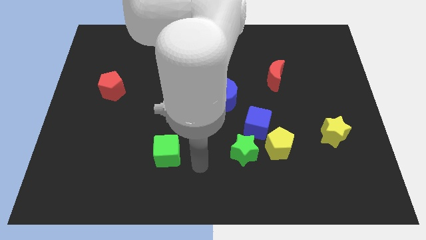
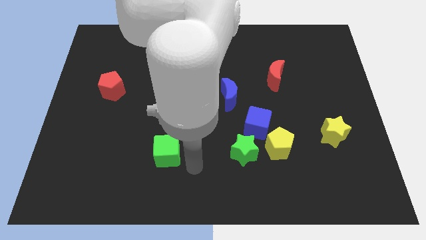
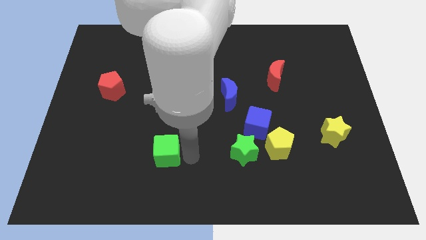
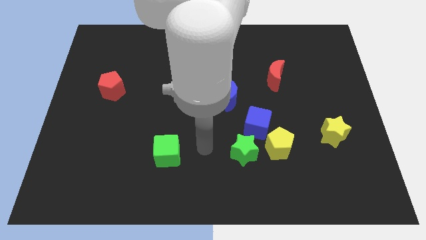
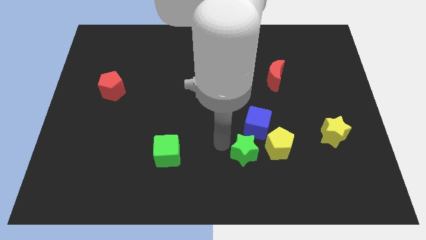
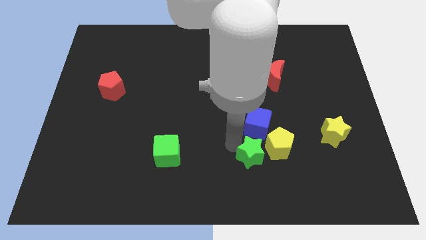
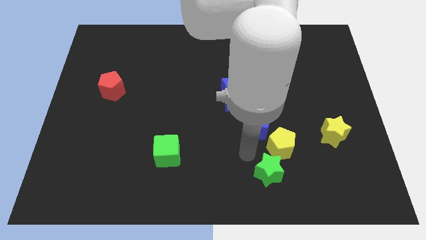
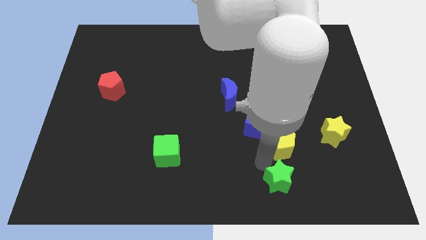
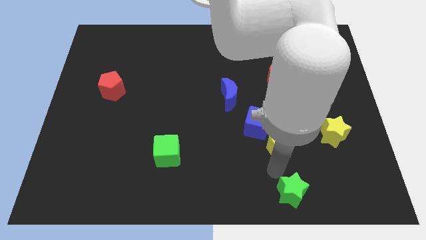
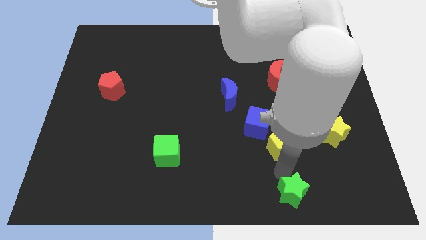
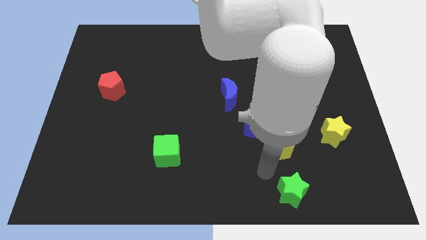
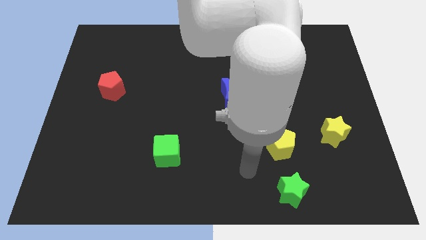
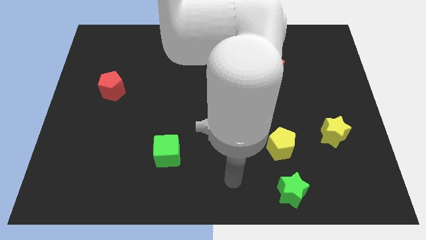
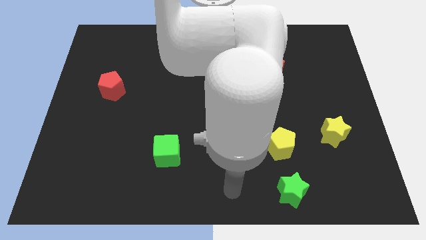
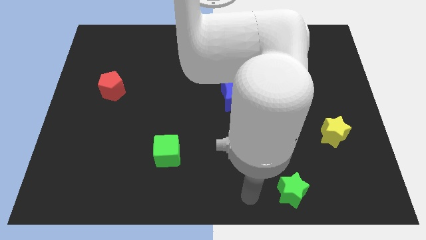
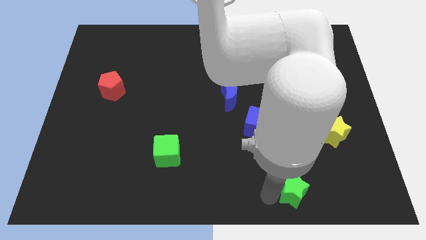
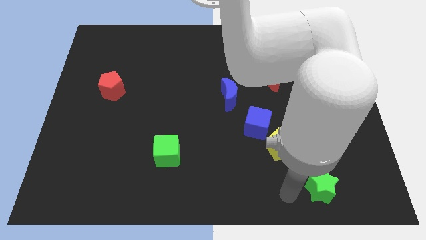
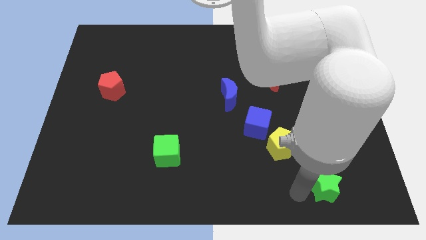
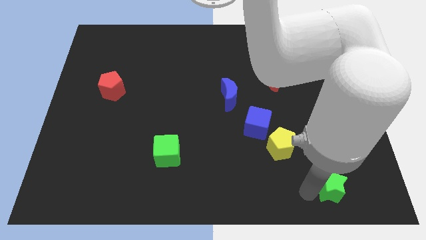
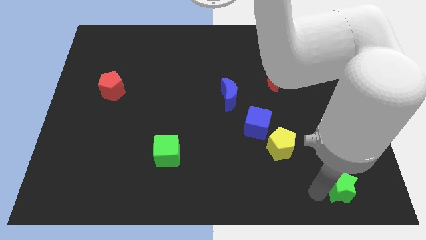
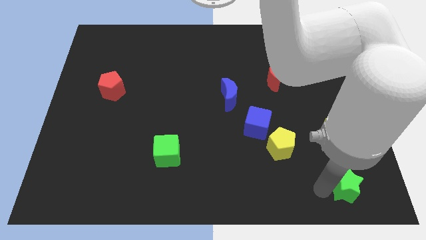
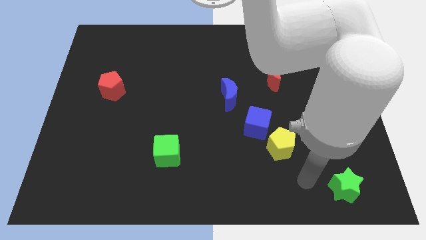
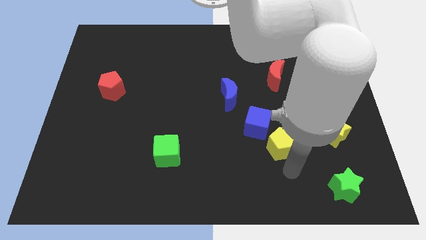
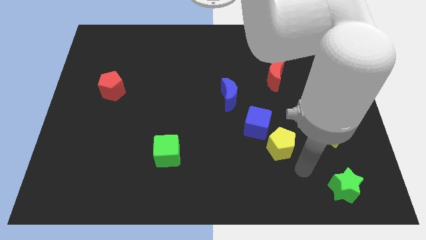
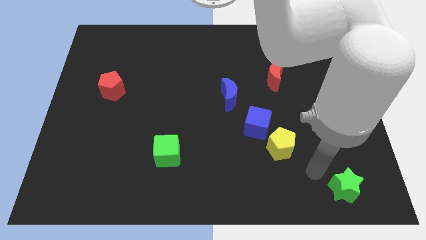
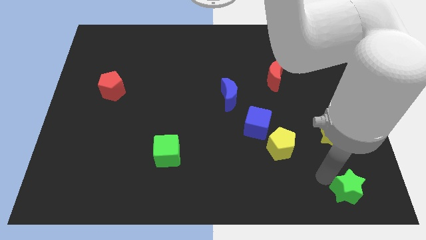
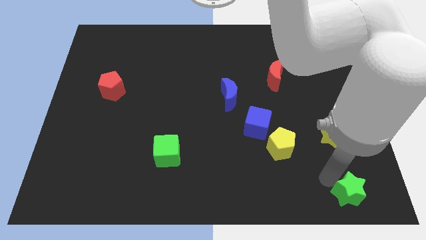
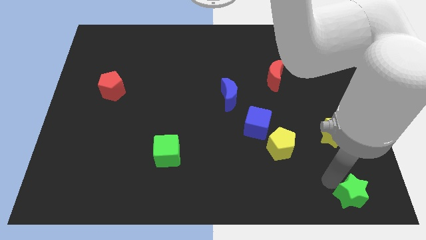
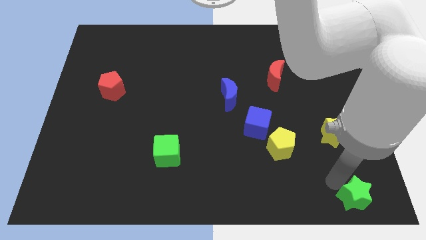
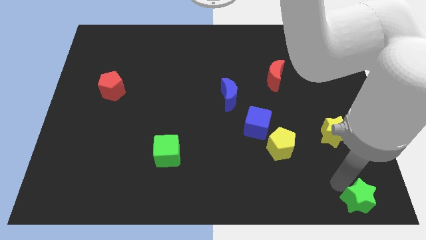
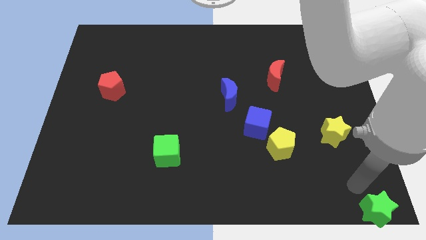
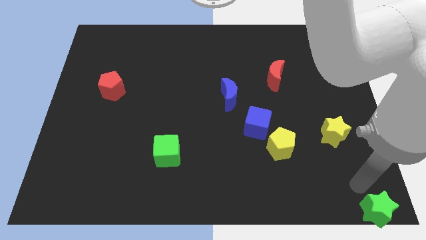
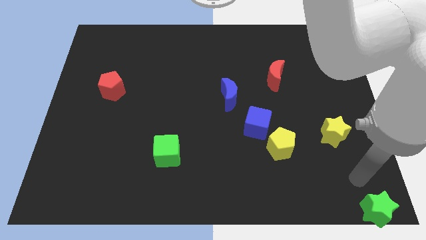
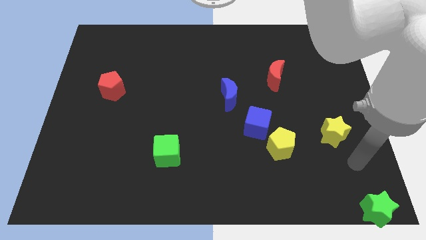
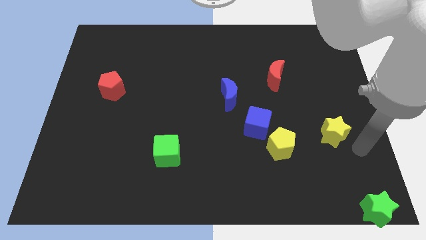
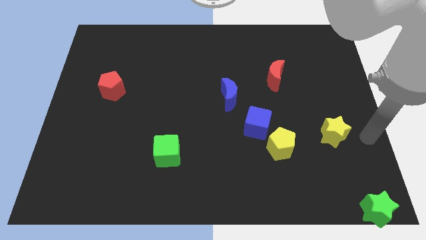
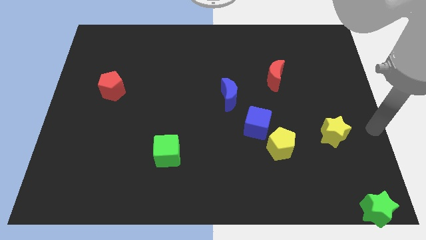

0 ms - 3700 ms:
put the green star to the green star diagonal below yellow star

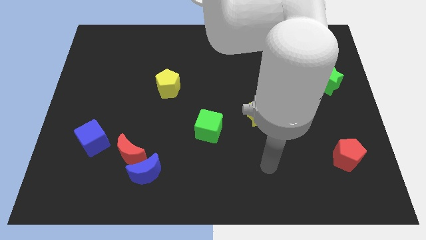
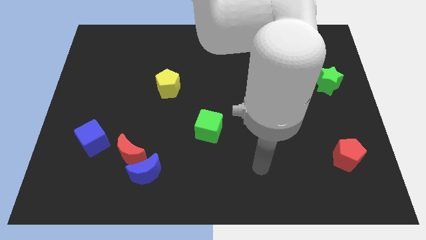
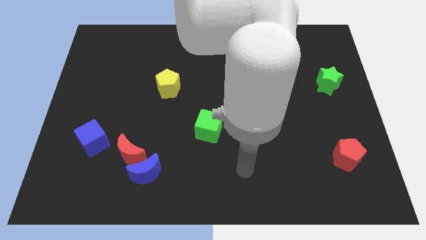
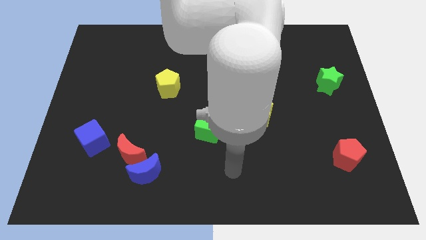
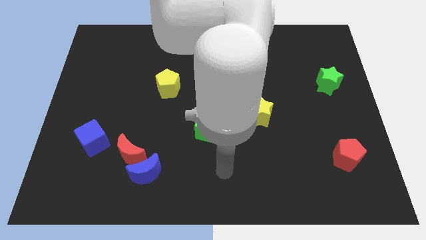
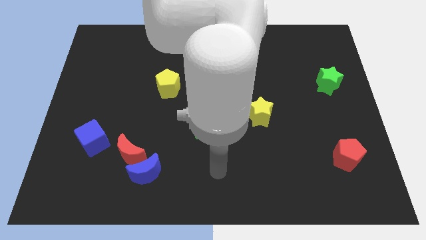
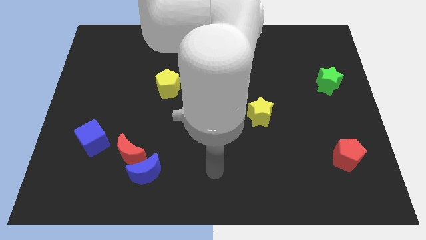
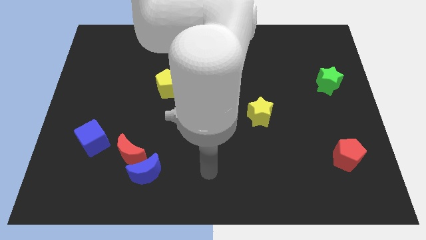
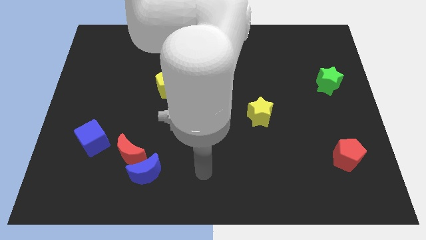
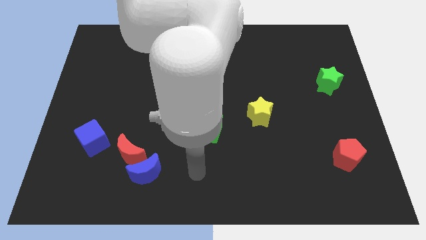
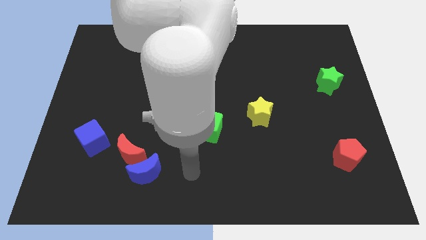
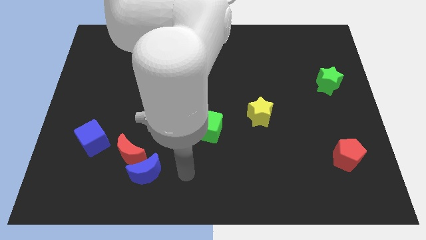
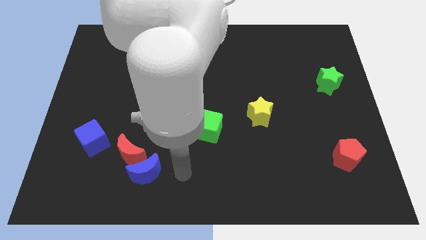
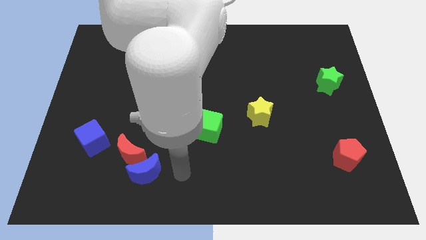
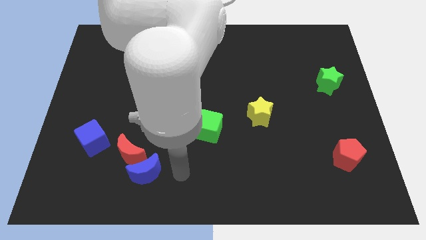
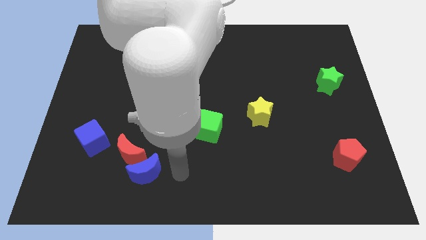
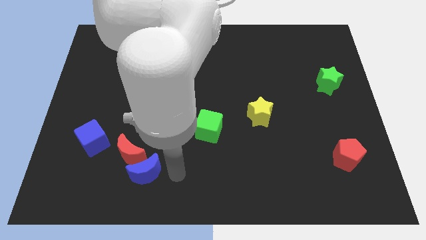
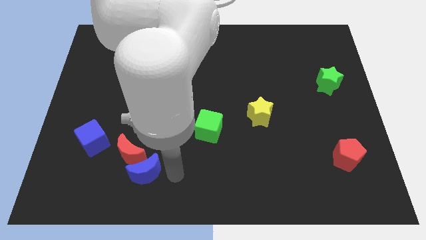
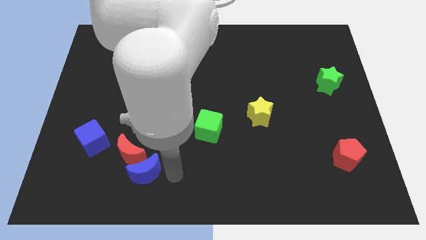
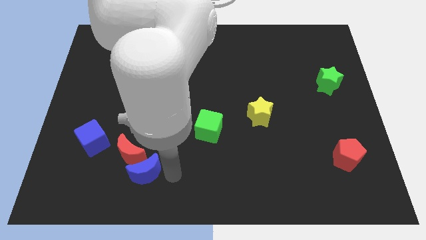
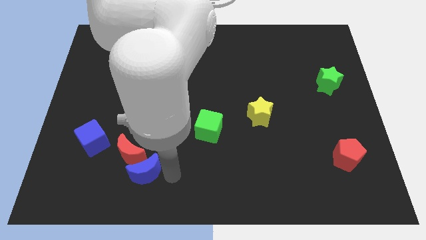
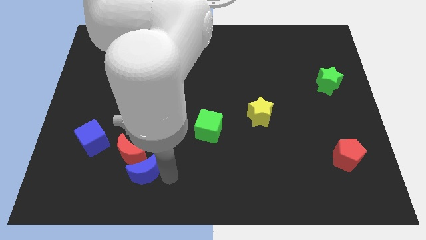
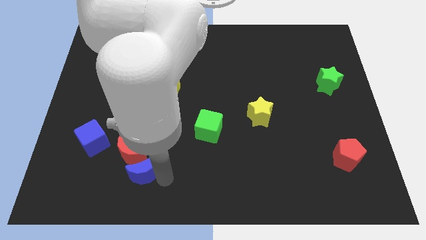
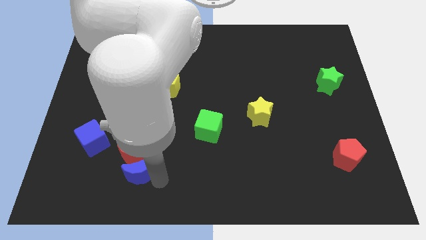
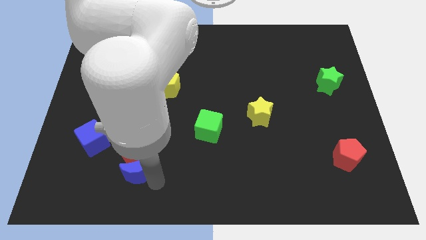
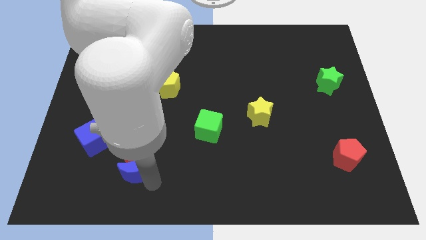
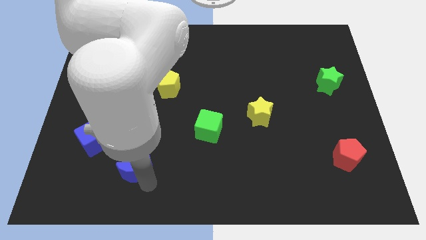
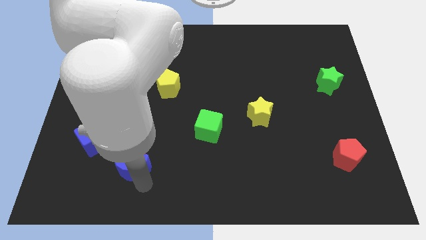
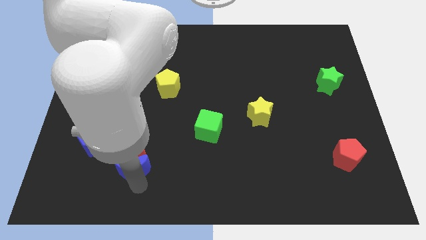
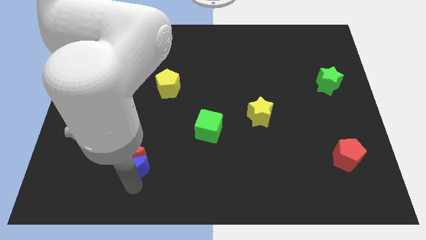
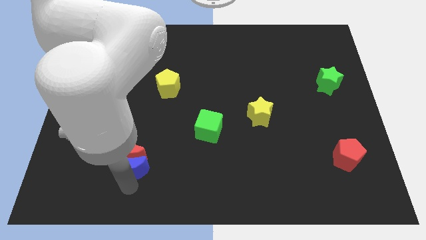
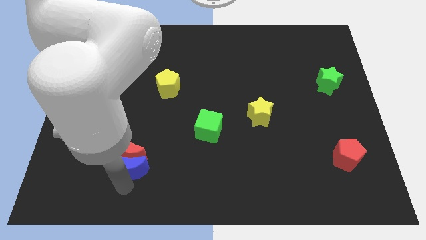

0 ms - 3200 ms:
slightly push the blue crescent to the bottom of the red crescent

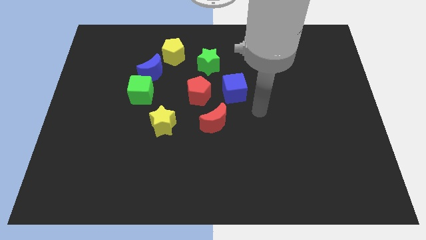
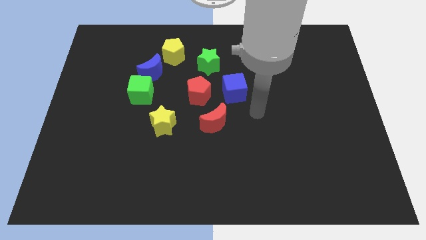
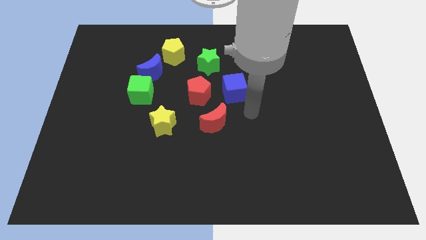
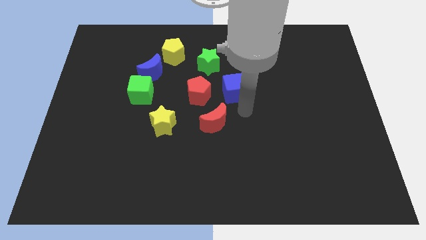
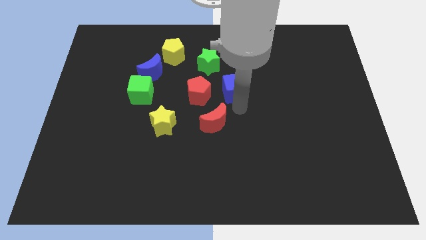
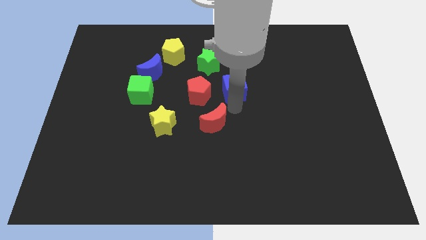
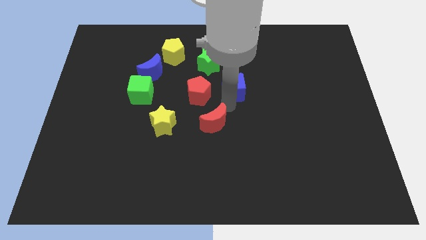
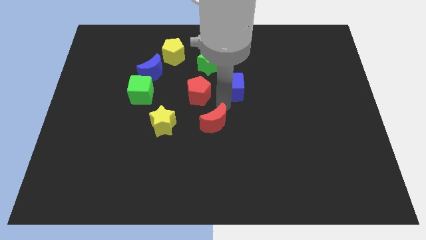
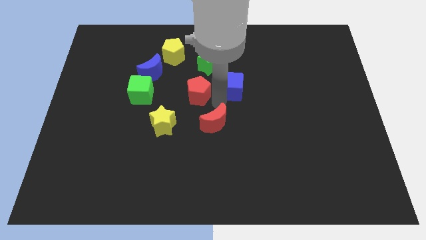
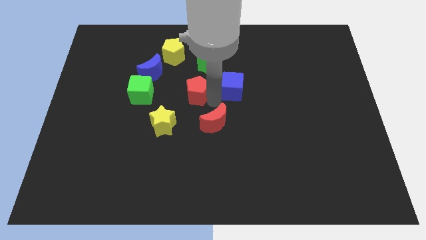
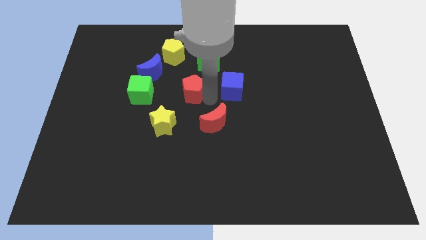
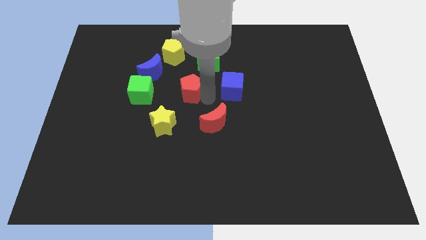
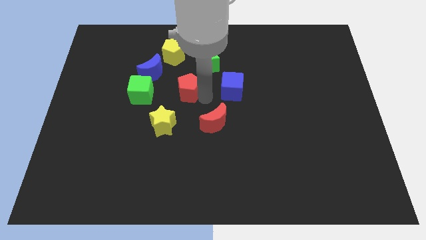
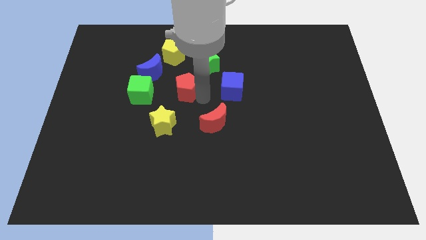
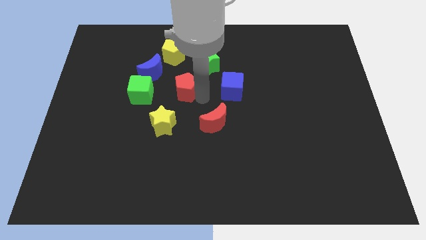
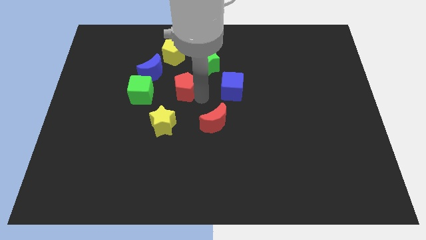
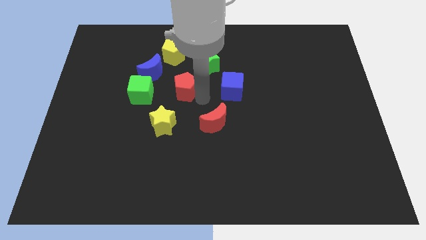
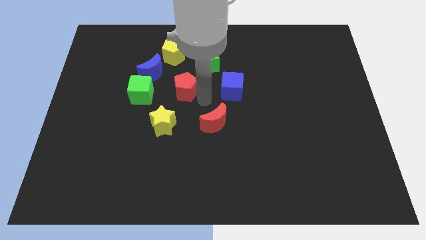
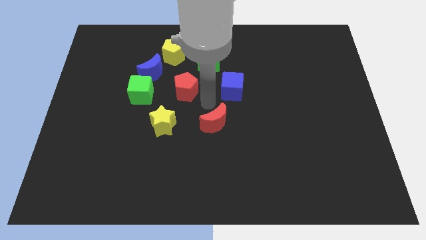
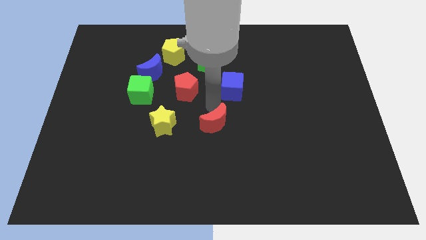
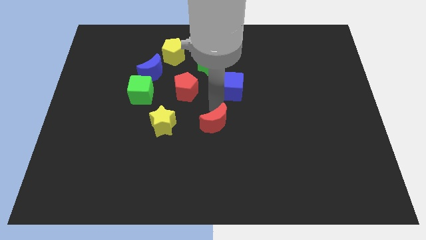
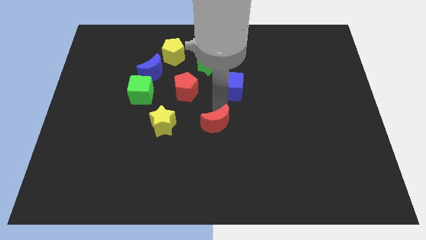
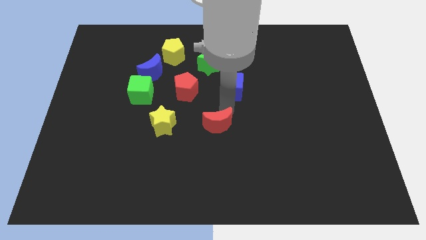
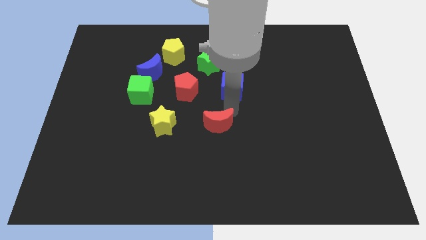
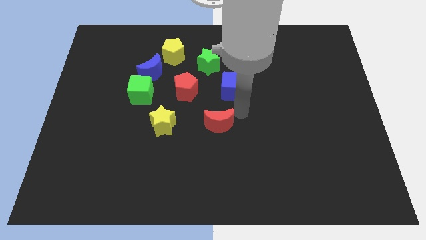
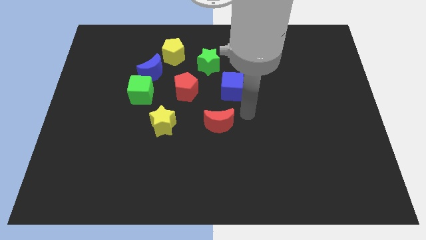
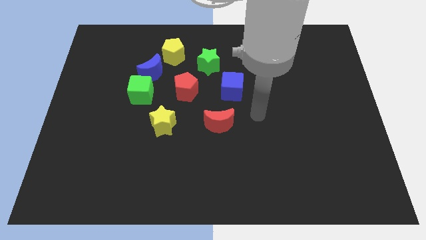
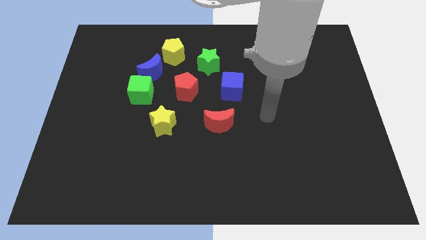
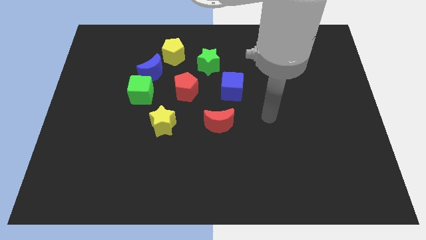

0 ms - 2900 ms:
place the red pentagon horizontally in between the green cube and blue cube
